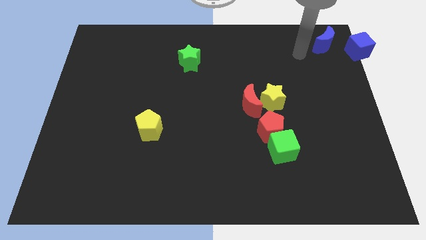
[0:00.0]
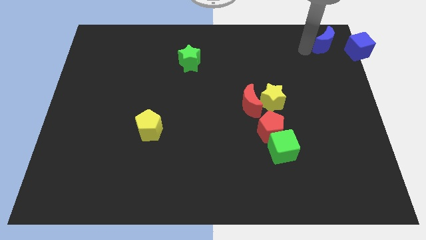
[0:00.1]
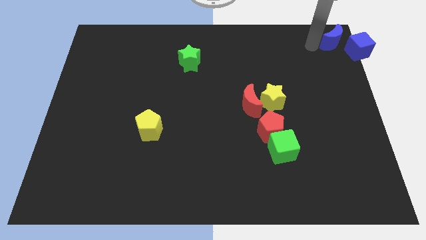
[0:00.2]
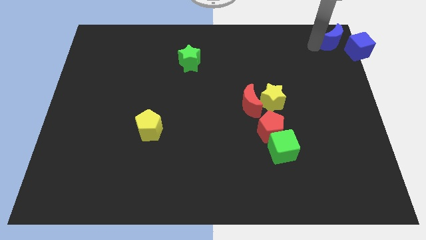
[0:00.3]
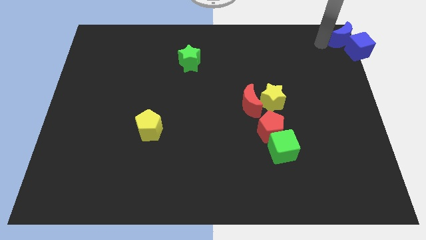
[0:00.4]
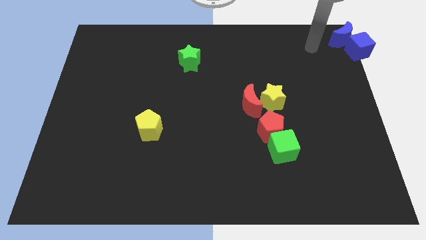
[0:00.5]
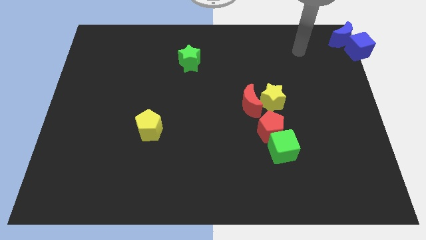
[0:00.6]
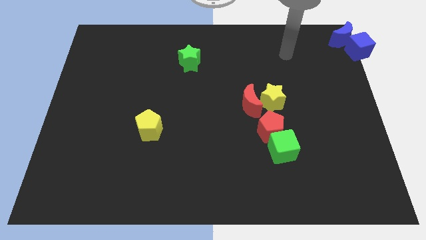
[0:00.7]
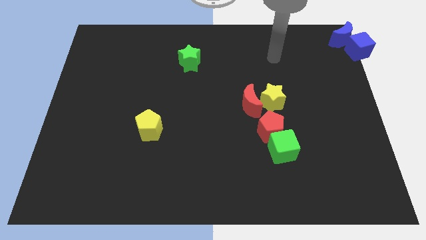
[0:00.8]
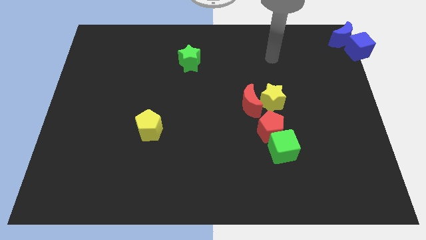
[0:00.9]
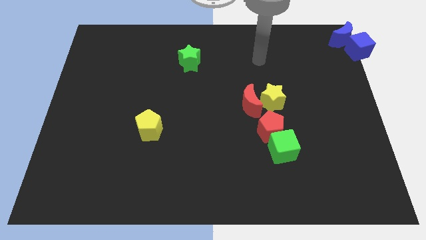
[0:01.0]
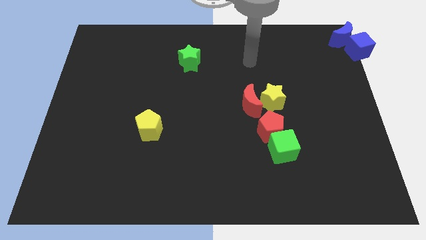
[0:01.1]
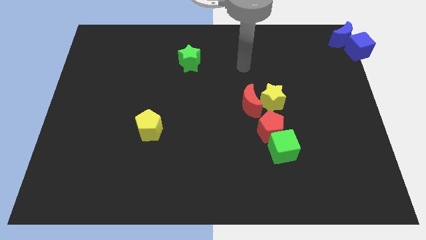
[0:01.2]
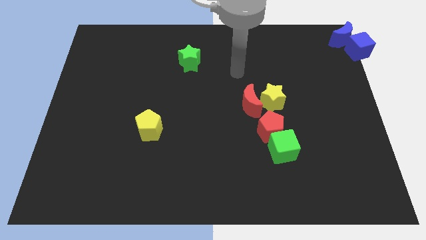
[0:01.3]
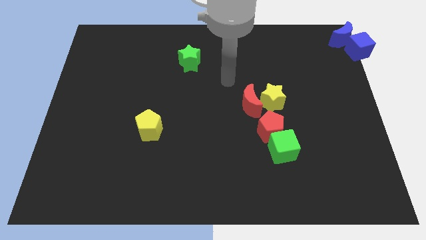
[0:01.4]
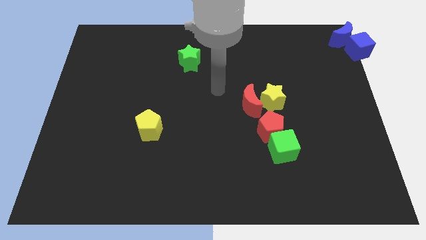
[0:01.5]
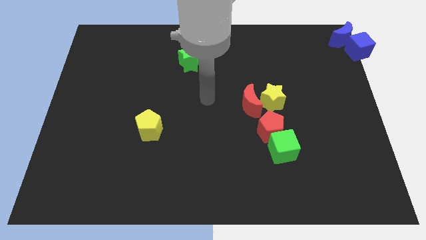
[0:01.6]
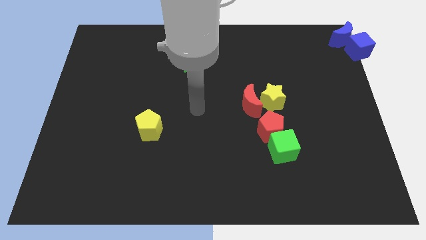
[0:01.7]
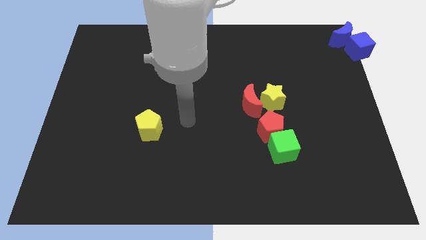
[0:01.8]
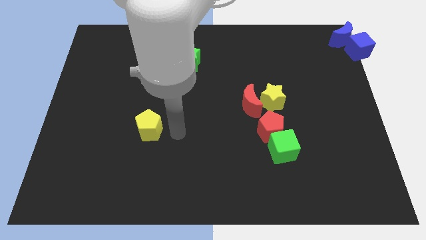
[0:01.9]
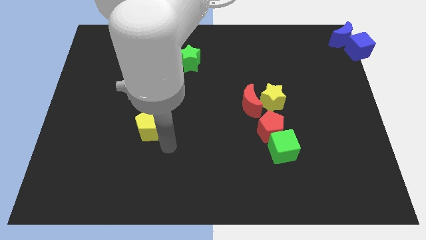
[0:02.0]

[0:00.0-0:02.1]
move your arm near yellow pentagon

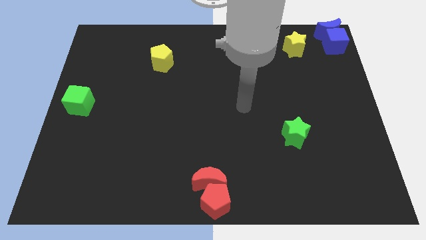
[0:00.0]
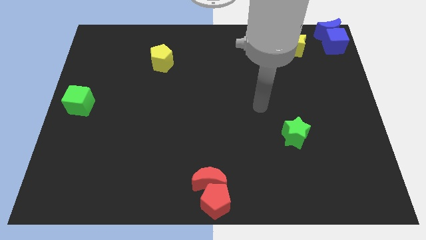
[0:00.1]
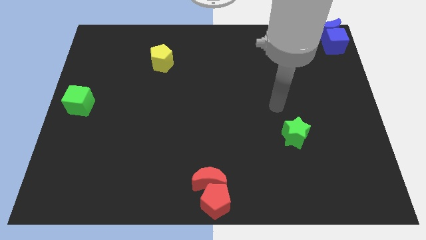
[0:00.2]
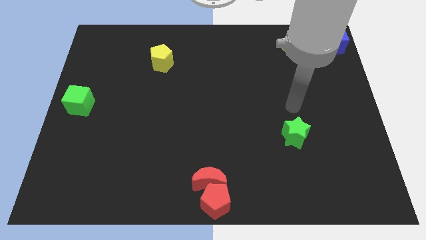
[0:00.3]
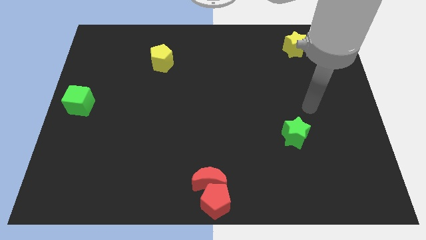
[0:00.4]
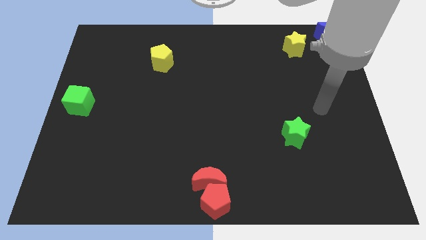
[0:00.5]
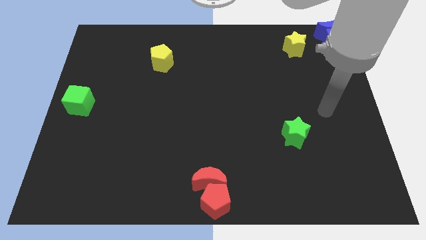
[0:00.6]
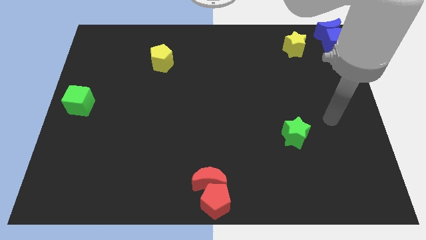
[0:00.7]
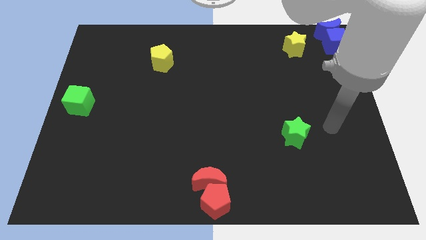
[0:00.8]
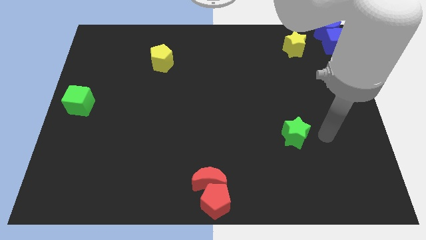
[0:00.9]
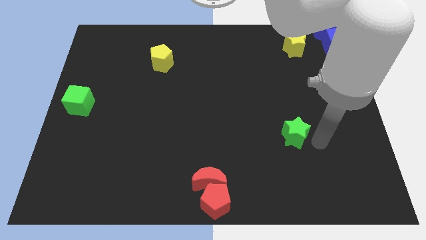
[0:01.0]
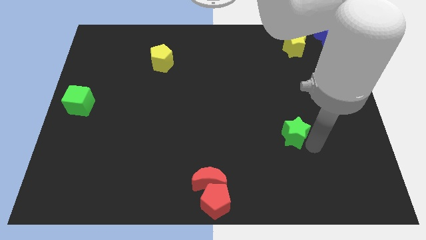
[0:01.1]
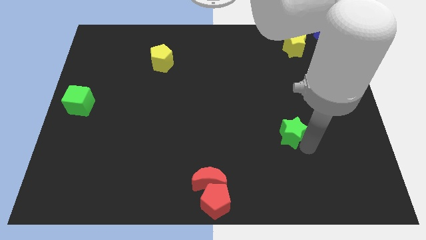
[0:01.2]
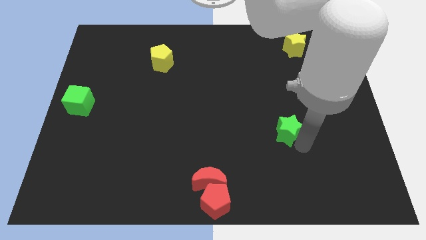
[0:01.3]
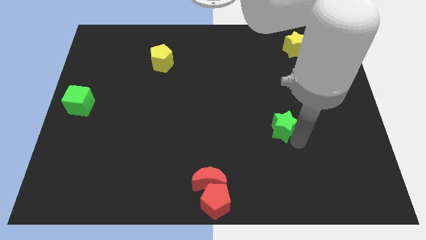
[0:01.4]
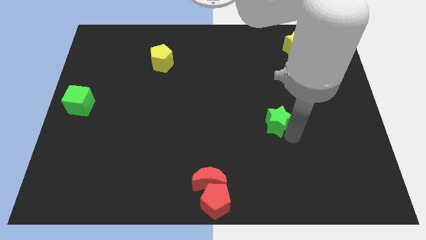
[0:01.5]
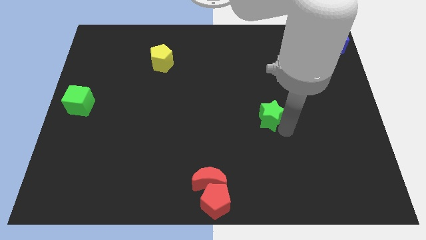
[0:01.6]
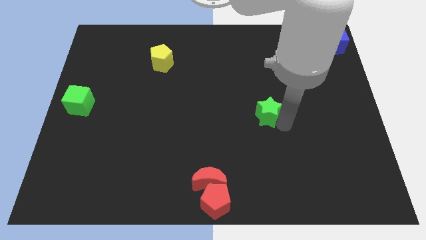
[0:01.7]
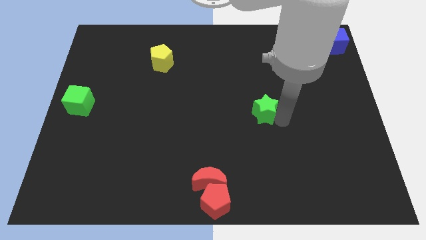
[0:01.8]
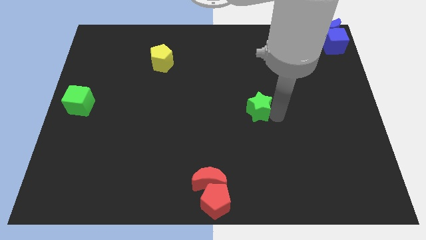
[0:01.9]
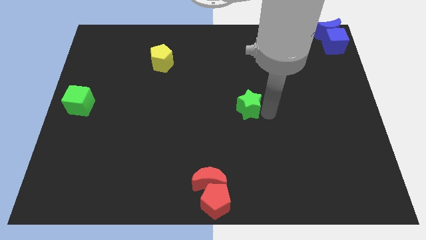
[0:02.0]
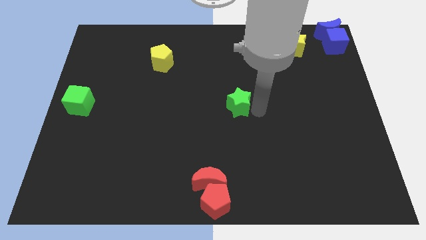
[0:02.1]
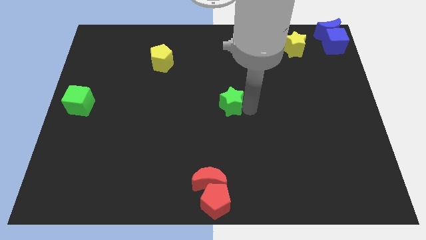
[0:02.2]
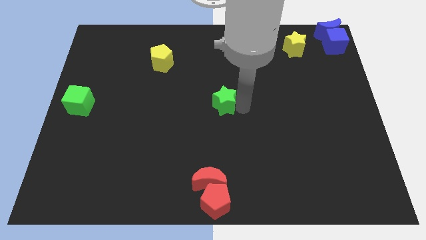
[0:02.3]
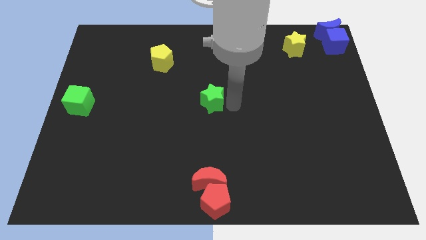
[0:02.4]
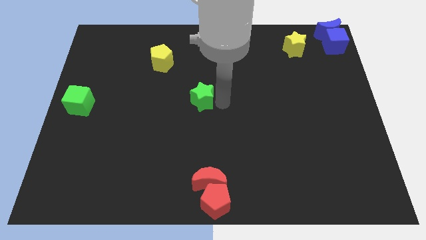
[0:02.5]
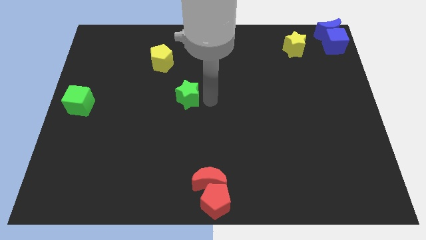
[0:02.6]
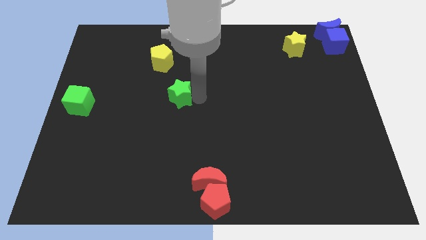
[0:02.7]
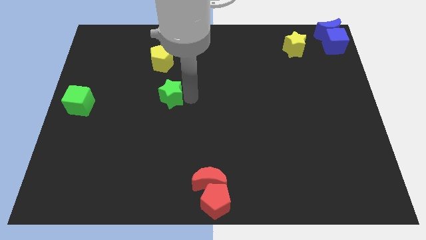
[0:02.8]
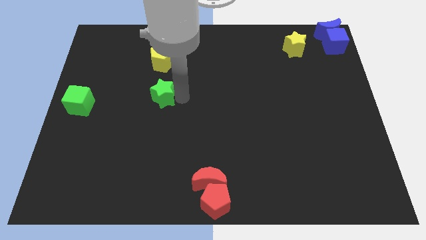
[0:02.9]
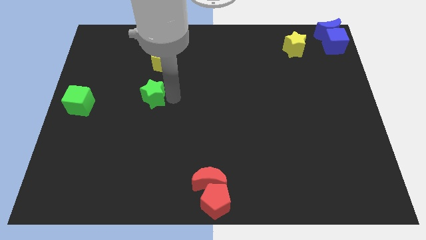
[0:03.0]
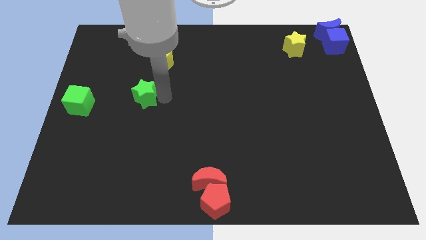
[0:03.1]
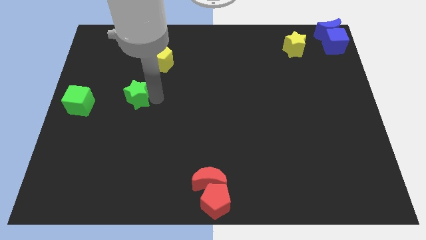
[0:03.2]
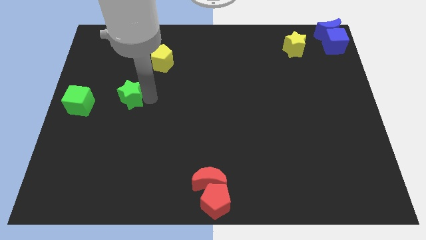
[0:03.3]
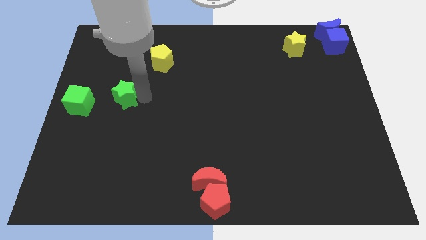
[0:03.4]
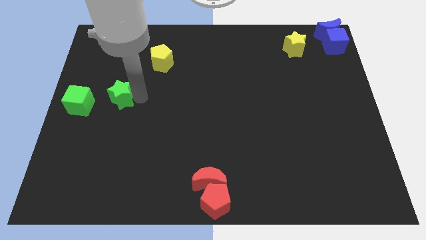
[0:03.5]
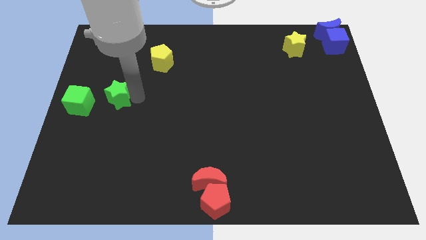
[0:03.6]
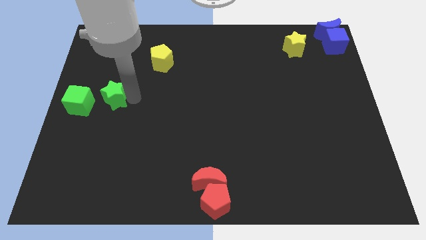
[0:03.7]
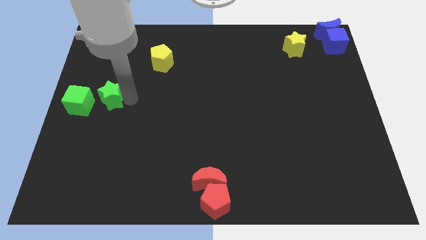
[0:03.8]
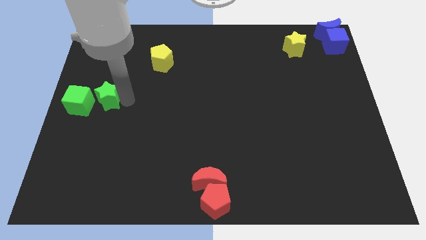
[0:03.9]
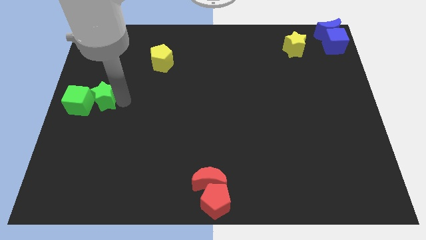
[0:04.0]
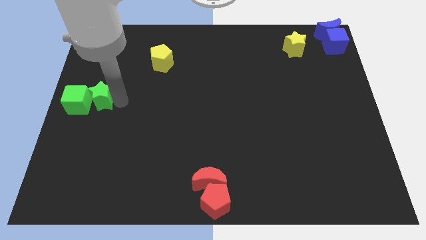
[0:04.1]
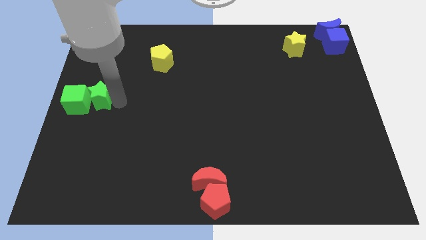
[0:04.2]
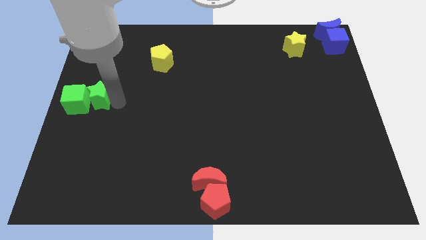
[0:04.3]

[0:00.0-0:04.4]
place the green star on the right side of the green cube

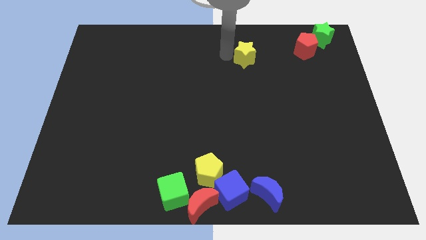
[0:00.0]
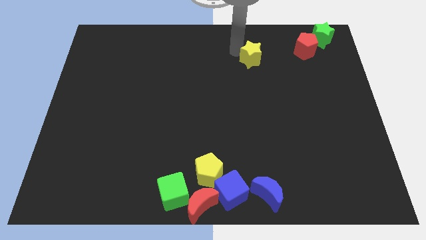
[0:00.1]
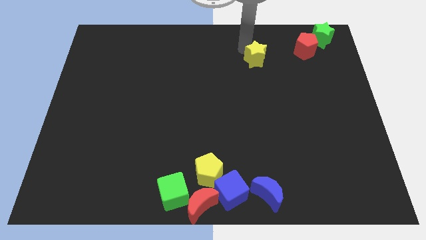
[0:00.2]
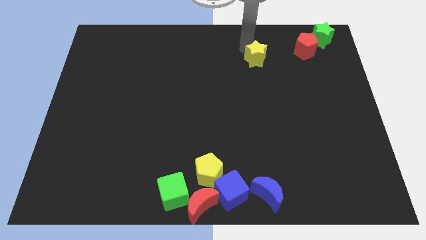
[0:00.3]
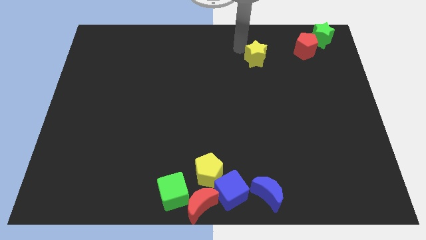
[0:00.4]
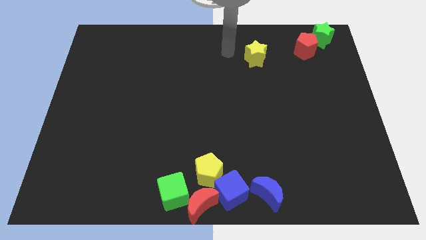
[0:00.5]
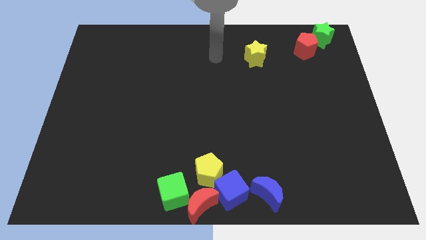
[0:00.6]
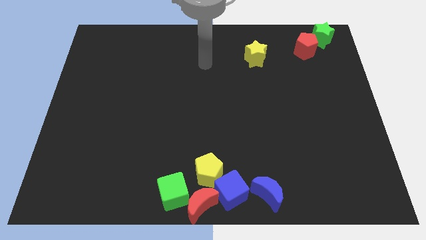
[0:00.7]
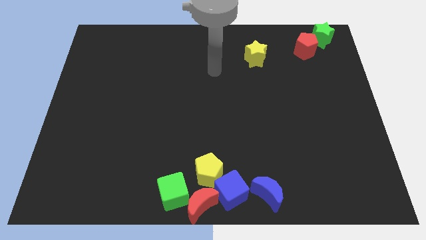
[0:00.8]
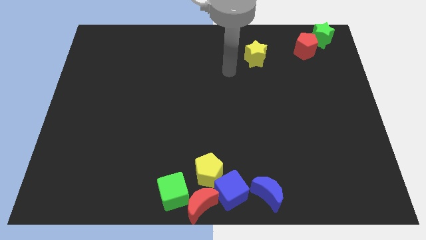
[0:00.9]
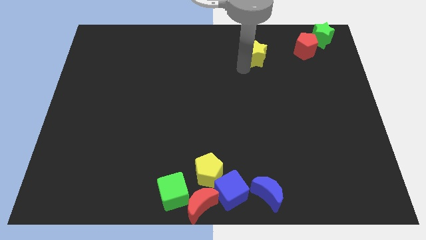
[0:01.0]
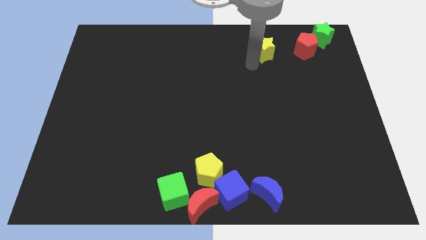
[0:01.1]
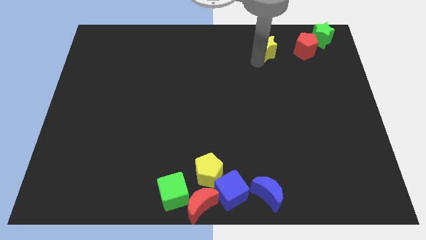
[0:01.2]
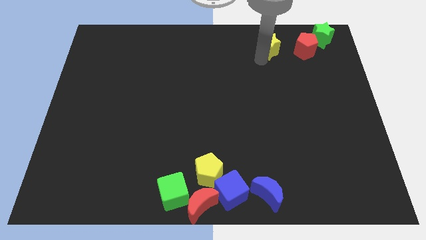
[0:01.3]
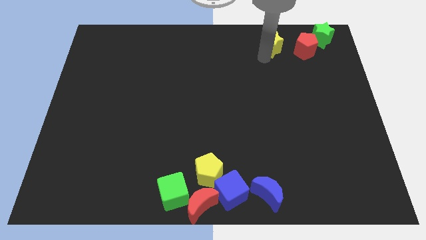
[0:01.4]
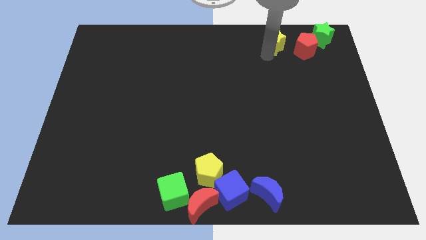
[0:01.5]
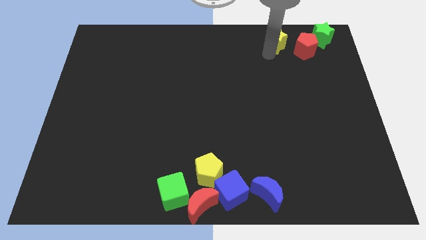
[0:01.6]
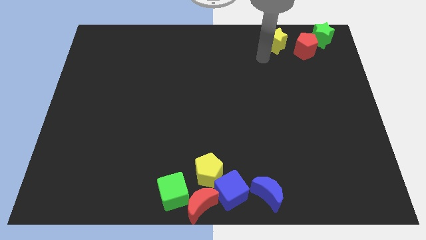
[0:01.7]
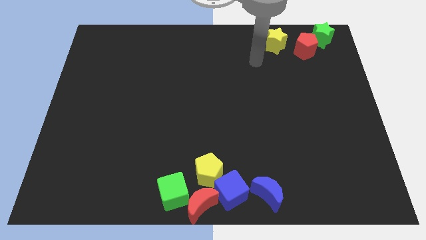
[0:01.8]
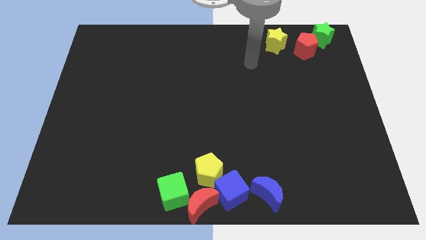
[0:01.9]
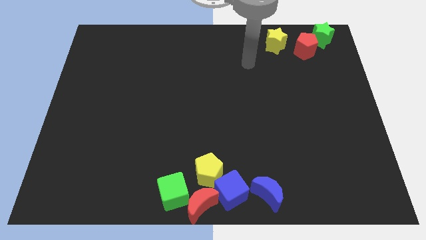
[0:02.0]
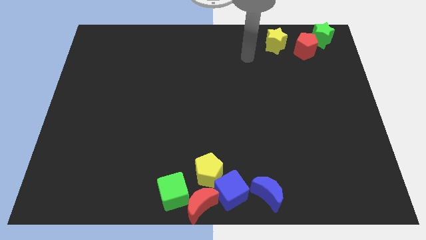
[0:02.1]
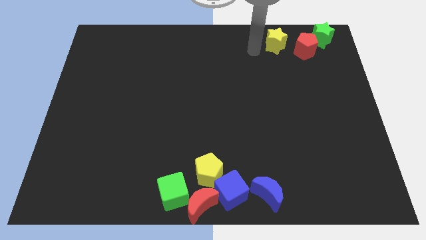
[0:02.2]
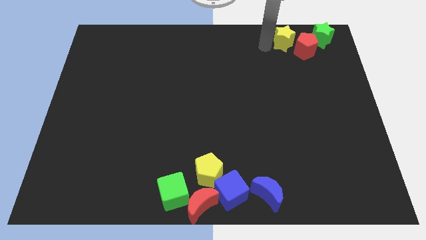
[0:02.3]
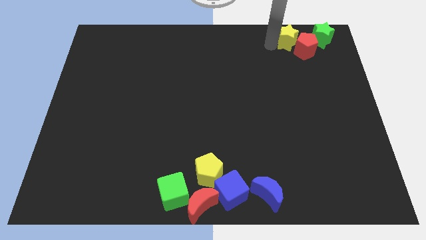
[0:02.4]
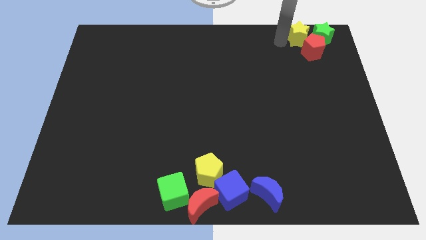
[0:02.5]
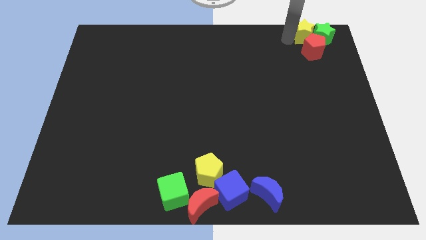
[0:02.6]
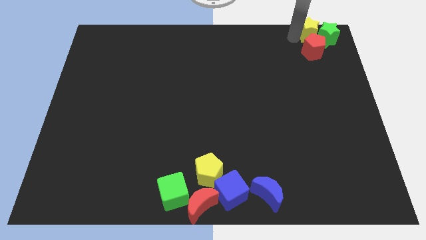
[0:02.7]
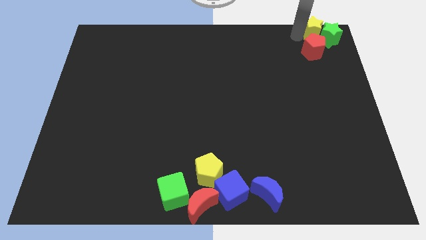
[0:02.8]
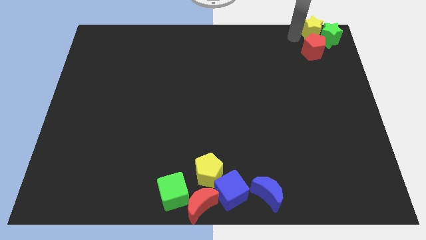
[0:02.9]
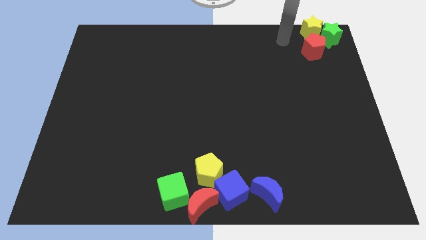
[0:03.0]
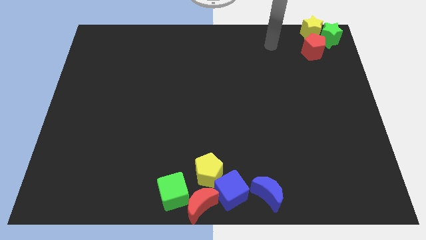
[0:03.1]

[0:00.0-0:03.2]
move the yellow star into the green star
